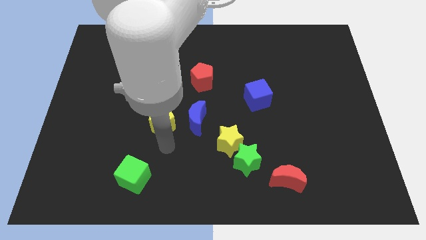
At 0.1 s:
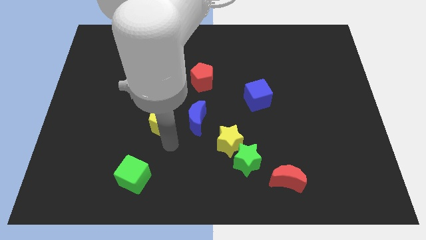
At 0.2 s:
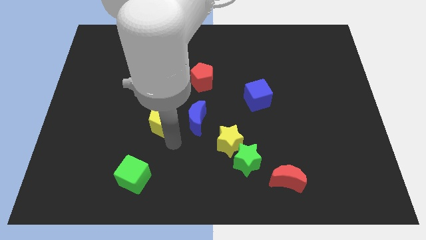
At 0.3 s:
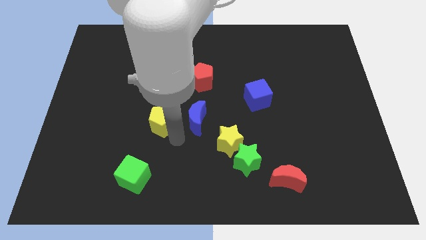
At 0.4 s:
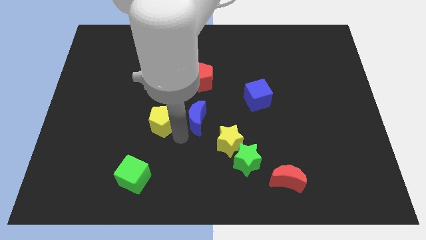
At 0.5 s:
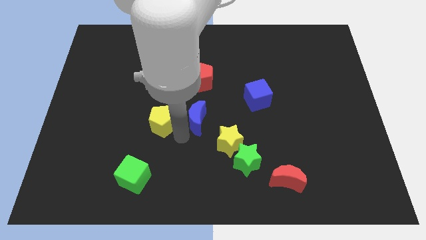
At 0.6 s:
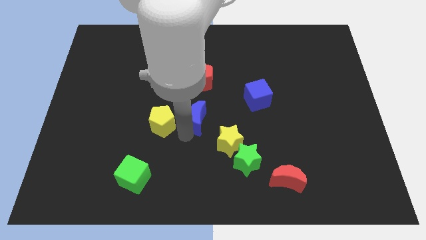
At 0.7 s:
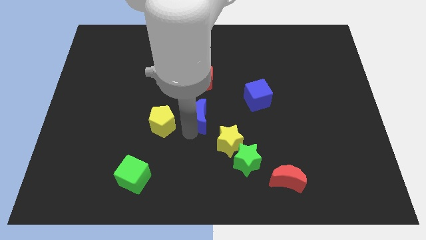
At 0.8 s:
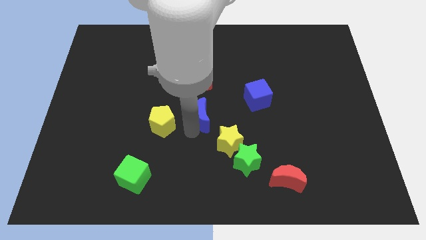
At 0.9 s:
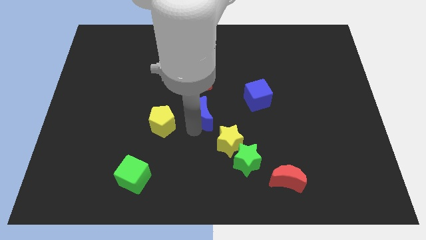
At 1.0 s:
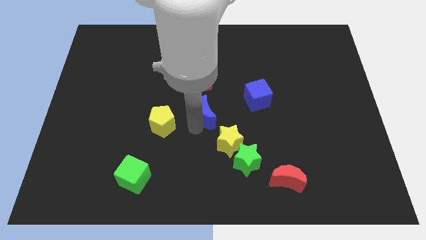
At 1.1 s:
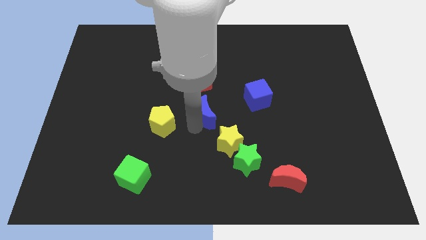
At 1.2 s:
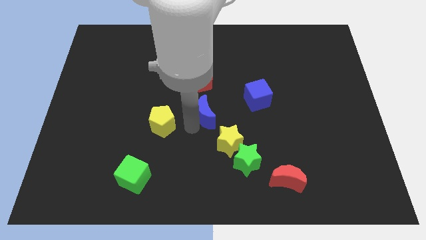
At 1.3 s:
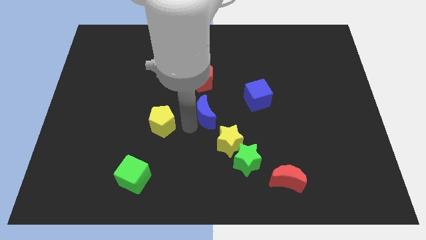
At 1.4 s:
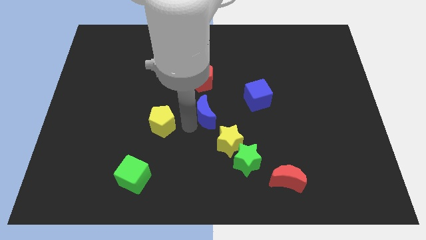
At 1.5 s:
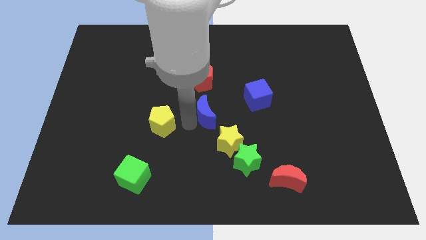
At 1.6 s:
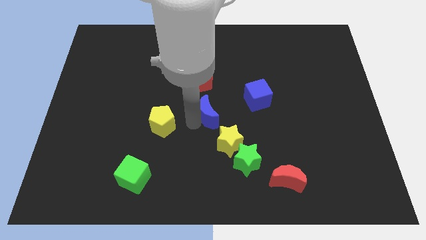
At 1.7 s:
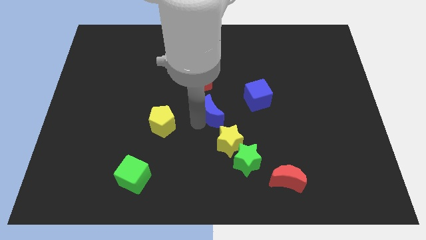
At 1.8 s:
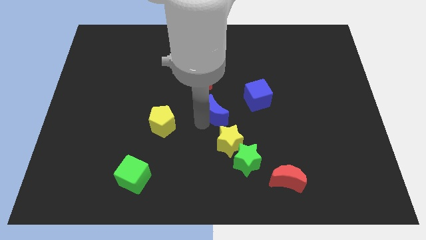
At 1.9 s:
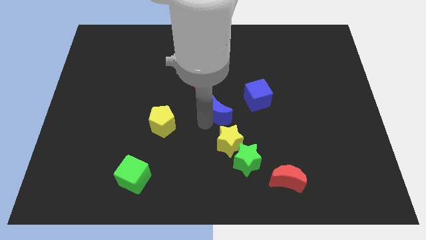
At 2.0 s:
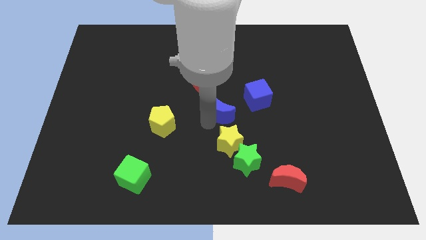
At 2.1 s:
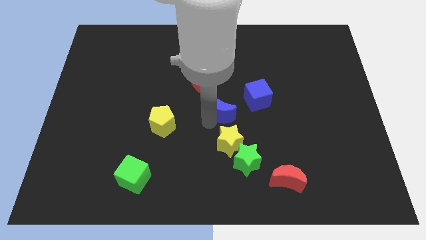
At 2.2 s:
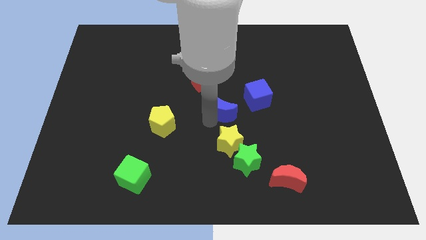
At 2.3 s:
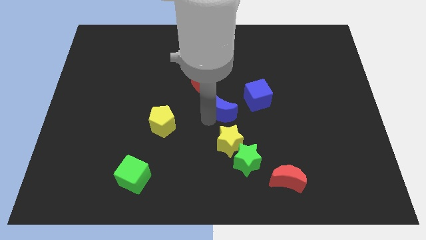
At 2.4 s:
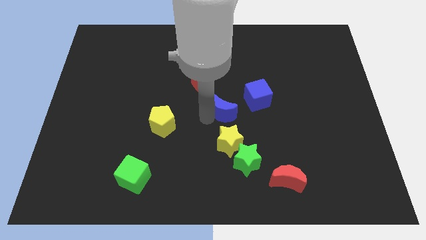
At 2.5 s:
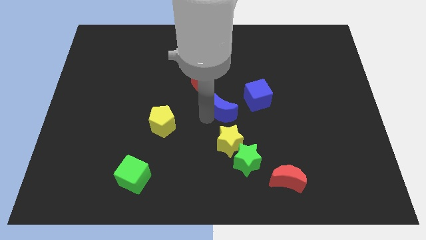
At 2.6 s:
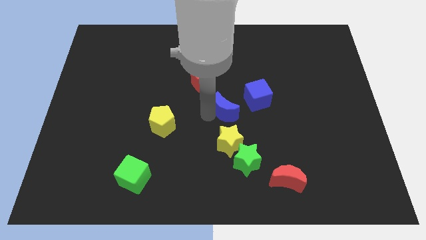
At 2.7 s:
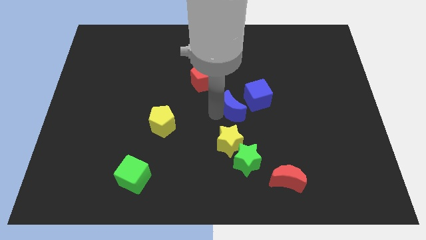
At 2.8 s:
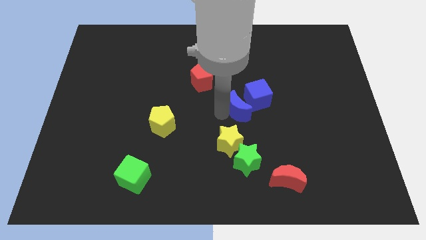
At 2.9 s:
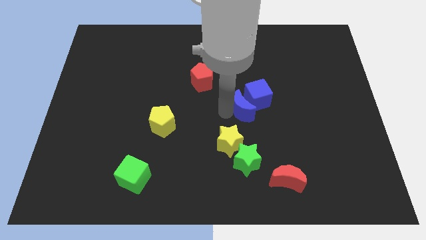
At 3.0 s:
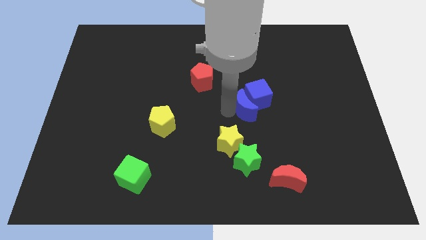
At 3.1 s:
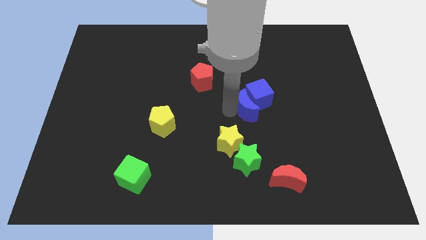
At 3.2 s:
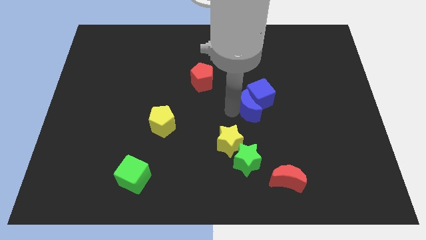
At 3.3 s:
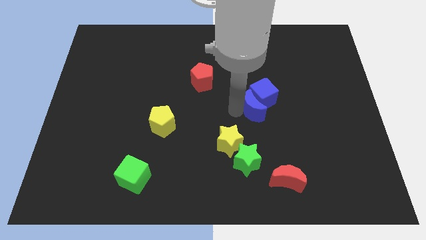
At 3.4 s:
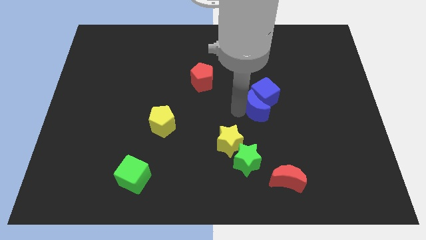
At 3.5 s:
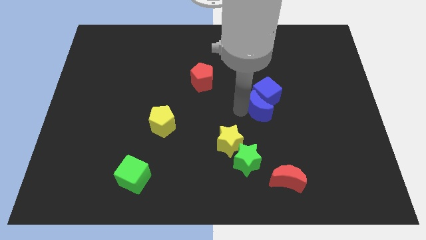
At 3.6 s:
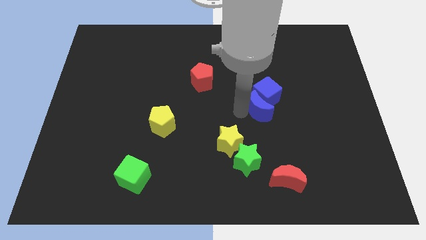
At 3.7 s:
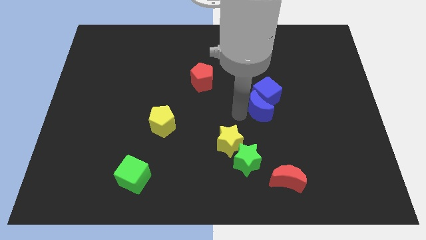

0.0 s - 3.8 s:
place the blue moon above the red moon

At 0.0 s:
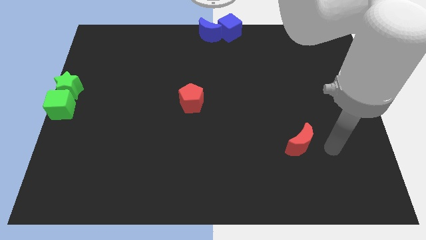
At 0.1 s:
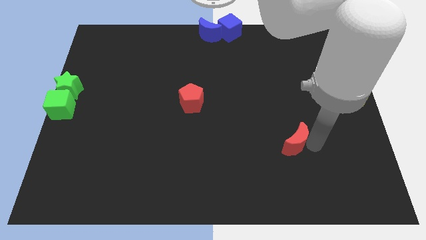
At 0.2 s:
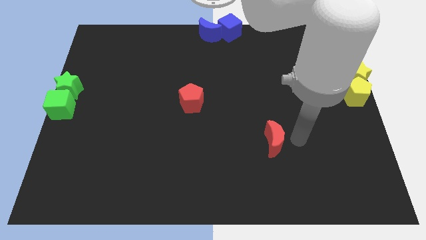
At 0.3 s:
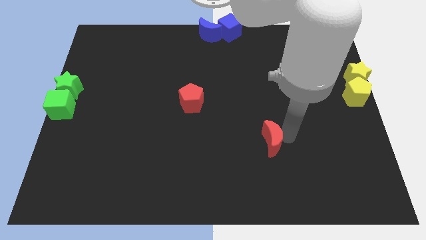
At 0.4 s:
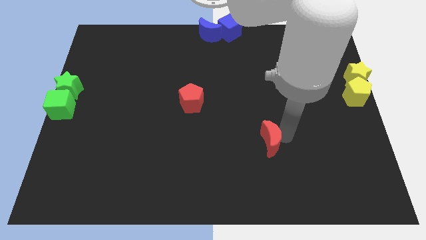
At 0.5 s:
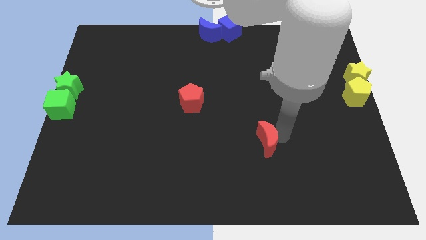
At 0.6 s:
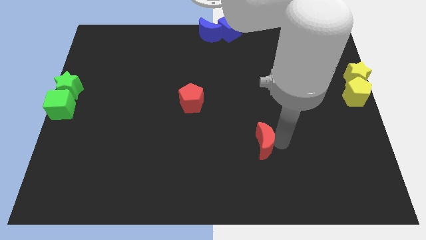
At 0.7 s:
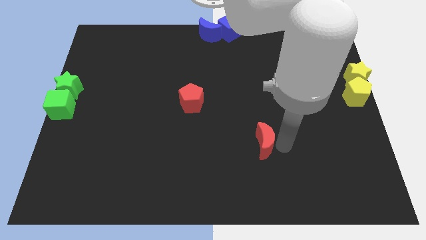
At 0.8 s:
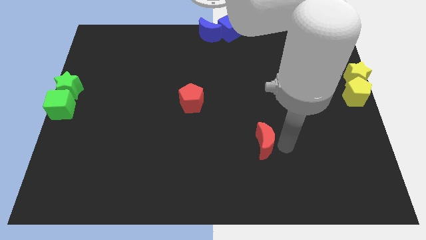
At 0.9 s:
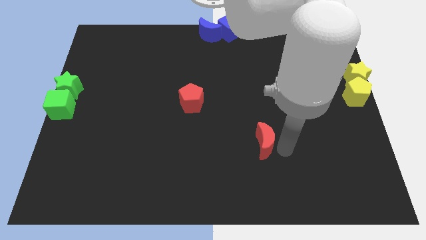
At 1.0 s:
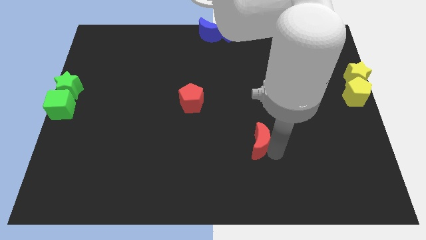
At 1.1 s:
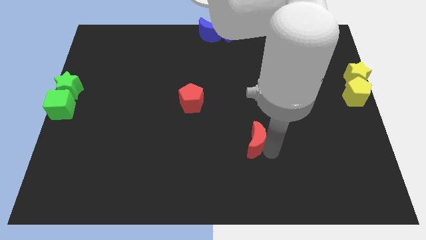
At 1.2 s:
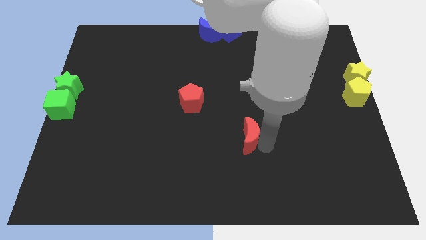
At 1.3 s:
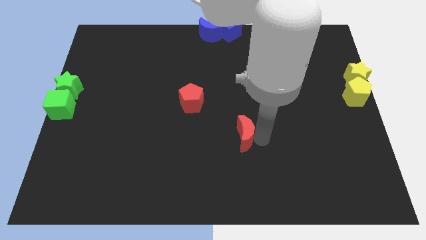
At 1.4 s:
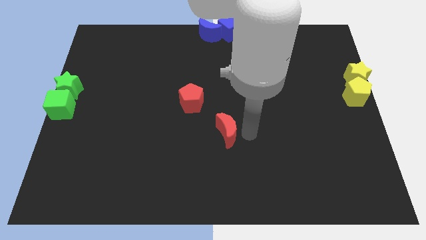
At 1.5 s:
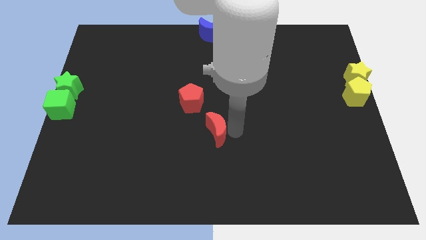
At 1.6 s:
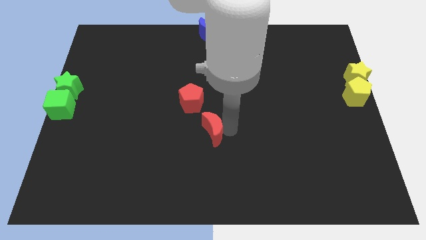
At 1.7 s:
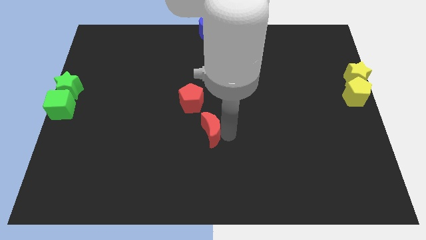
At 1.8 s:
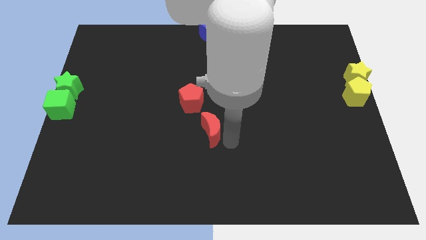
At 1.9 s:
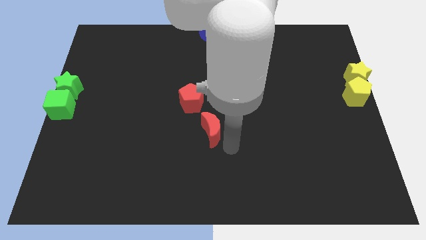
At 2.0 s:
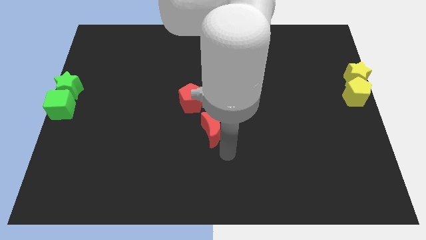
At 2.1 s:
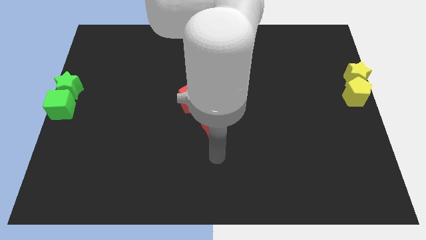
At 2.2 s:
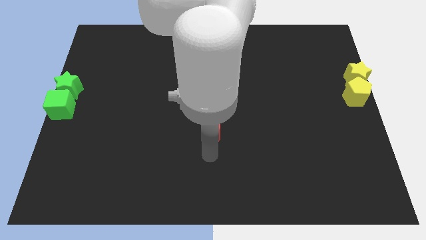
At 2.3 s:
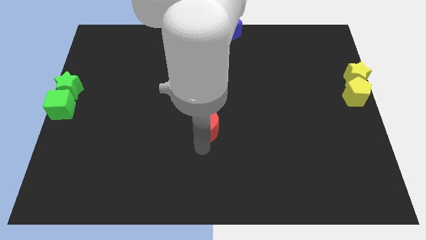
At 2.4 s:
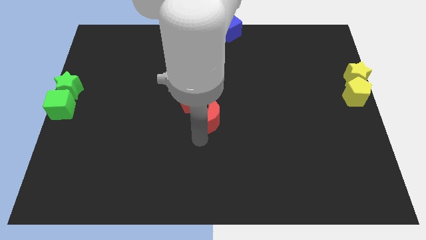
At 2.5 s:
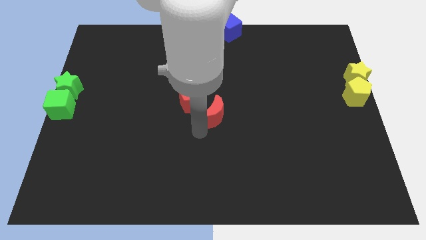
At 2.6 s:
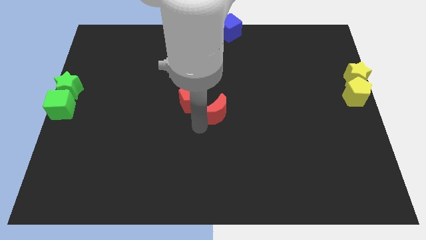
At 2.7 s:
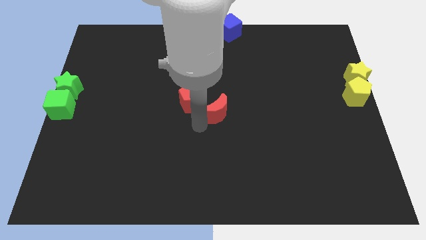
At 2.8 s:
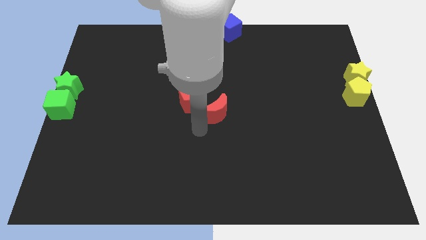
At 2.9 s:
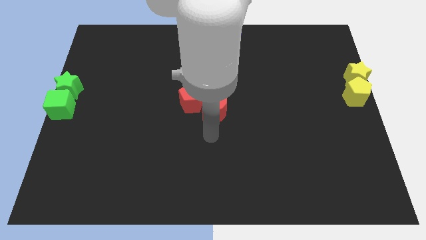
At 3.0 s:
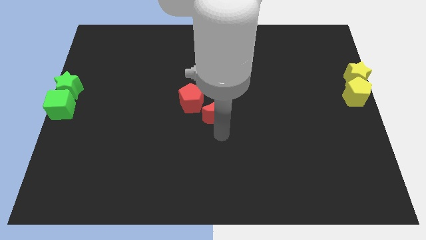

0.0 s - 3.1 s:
place the red moon right to the red pentagon

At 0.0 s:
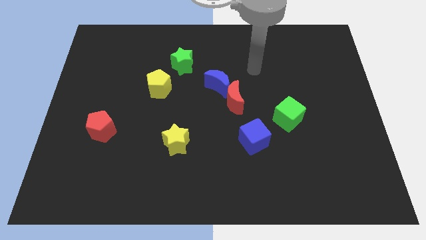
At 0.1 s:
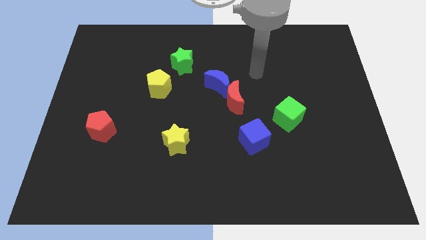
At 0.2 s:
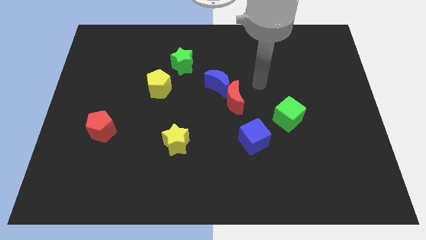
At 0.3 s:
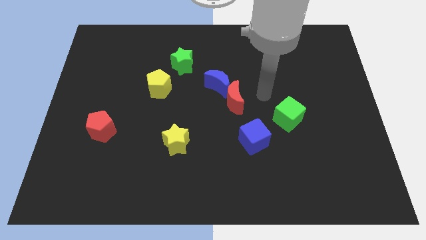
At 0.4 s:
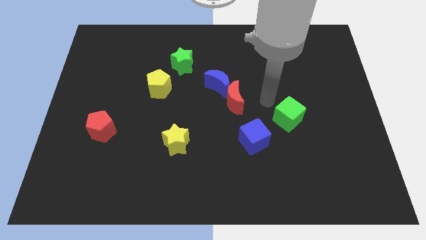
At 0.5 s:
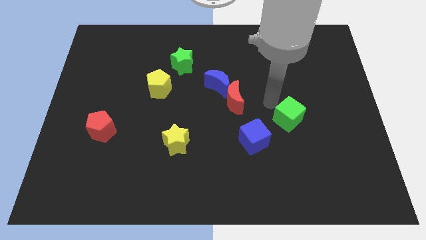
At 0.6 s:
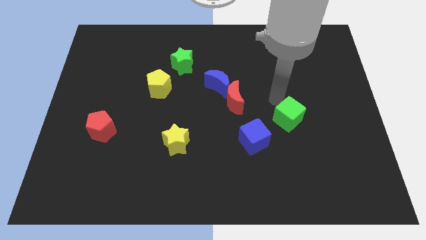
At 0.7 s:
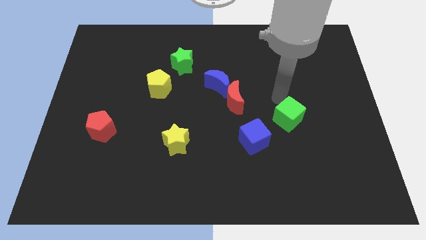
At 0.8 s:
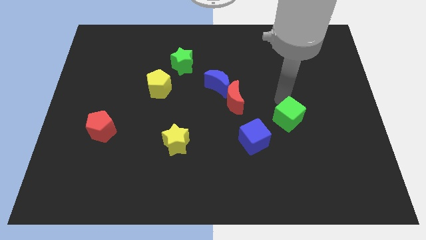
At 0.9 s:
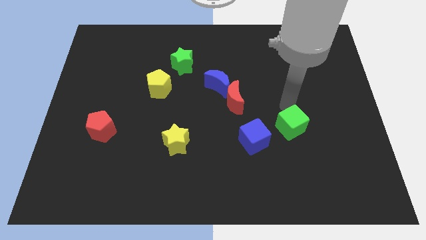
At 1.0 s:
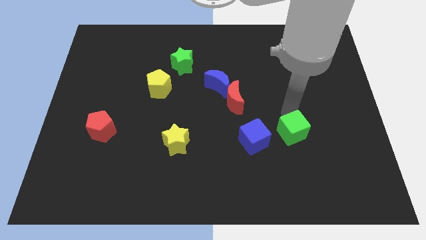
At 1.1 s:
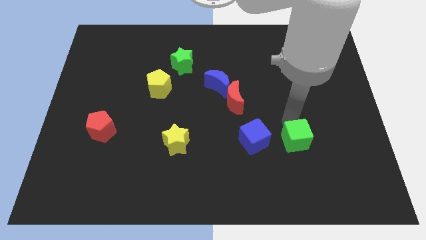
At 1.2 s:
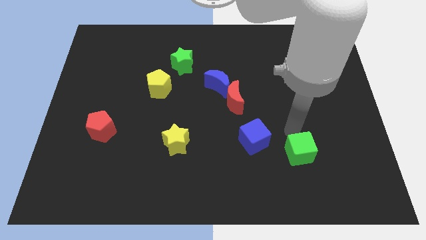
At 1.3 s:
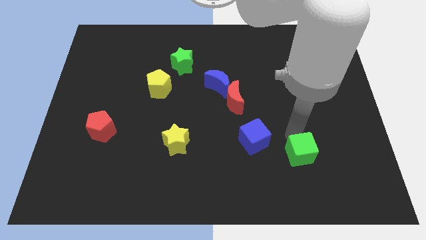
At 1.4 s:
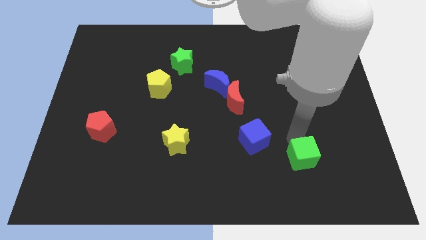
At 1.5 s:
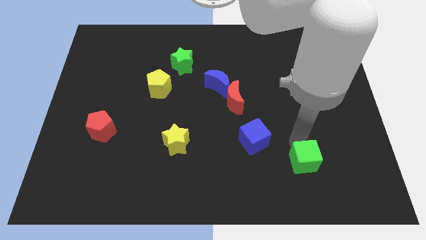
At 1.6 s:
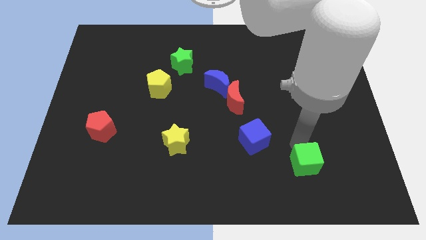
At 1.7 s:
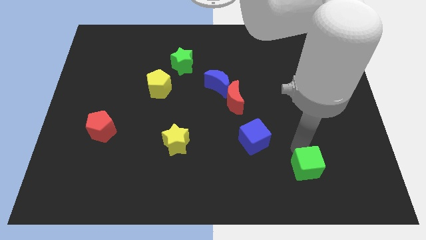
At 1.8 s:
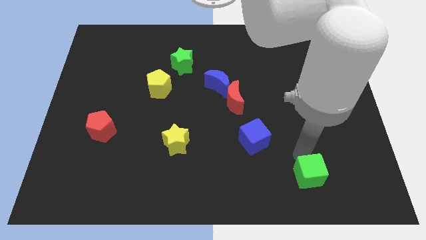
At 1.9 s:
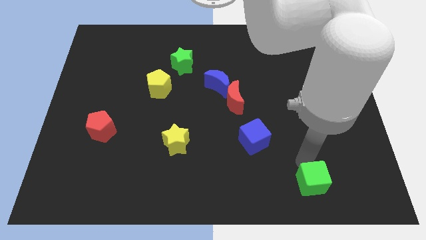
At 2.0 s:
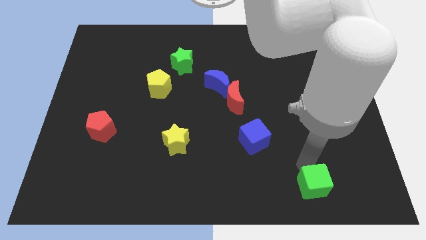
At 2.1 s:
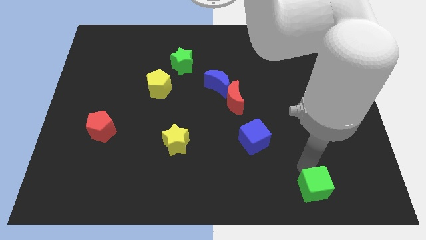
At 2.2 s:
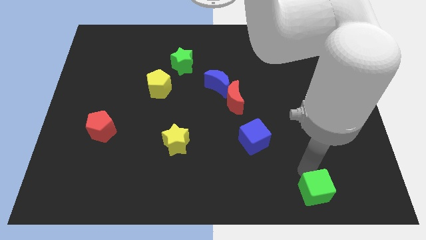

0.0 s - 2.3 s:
move the green cube to the bottom right of the blue cube
